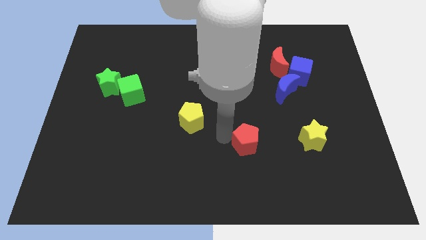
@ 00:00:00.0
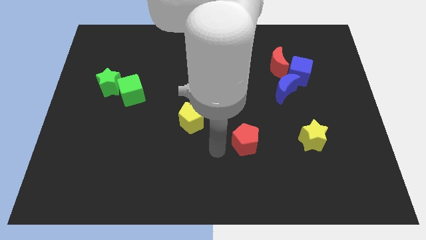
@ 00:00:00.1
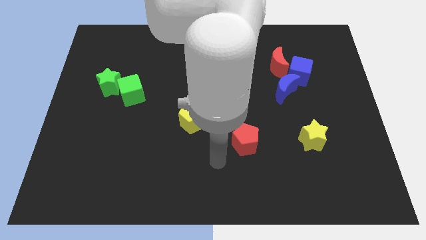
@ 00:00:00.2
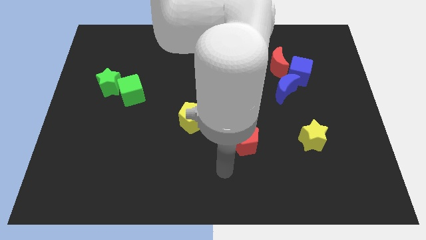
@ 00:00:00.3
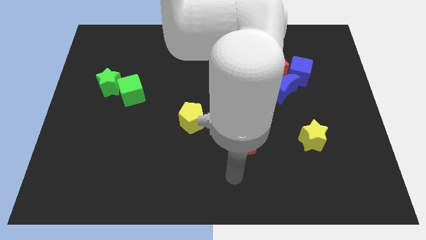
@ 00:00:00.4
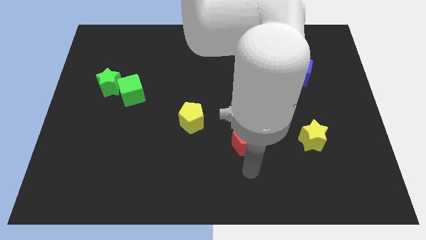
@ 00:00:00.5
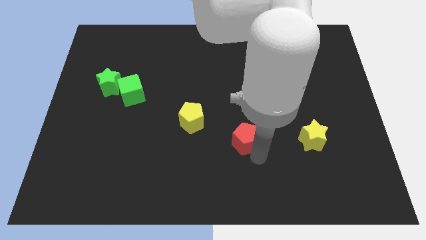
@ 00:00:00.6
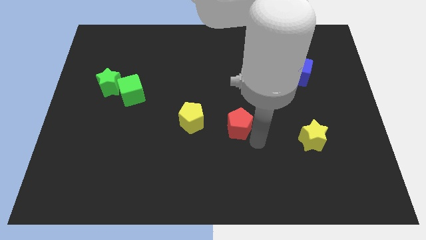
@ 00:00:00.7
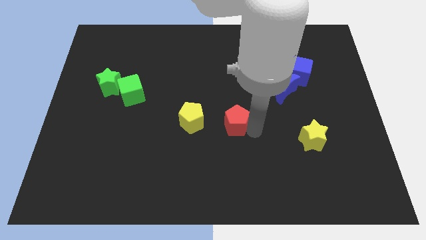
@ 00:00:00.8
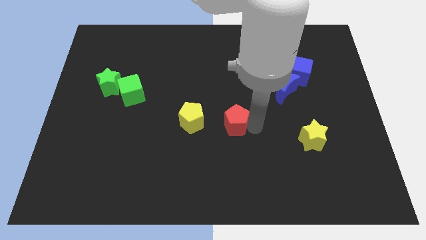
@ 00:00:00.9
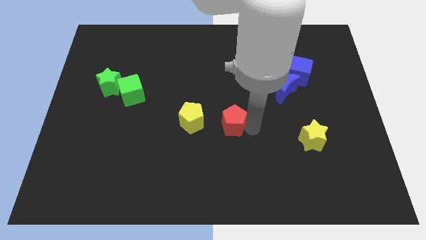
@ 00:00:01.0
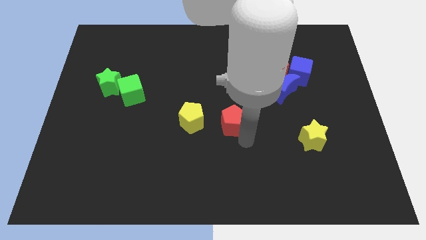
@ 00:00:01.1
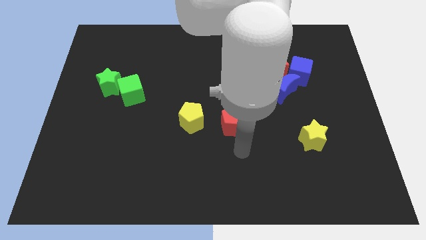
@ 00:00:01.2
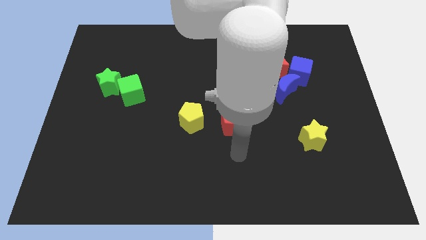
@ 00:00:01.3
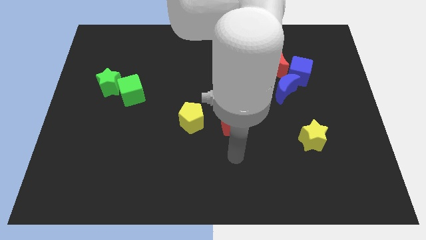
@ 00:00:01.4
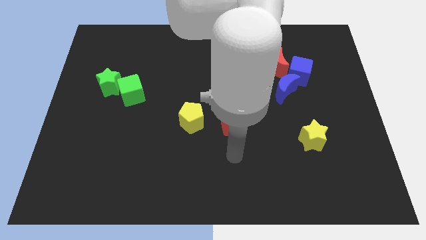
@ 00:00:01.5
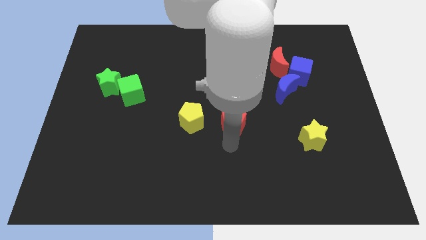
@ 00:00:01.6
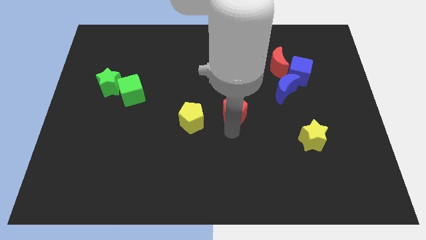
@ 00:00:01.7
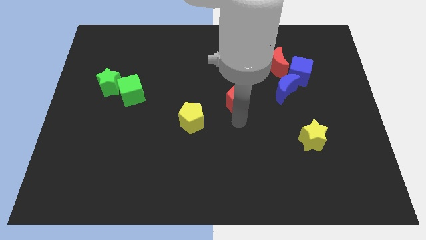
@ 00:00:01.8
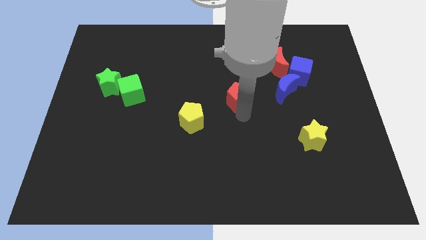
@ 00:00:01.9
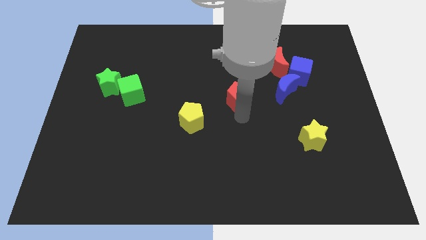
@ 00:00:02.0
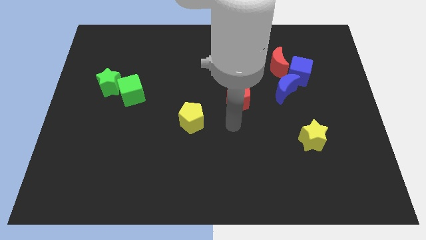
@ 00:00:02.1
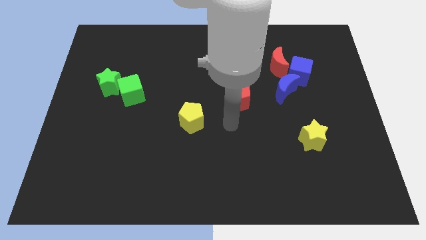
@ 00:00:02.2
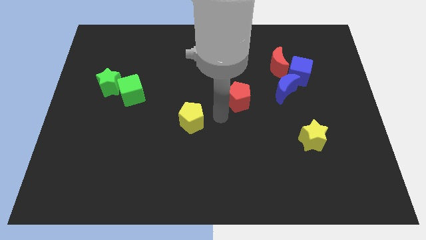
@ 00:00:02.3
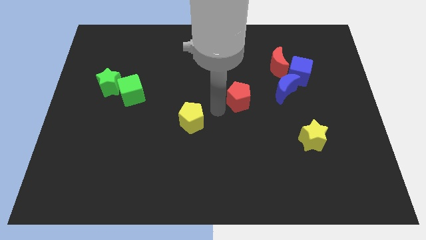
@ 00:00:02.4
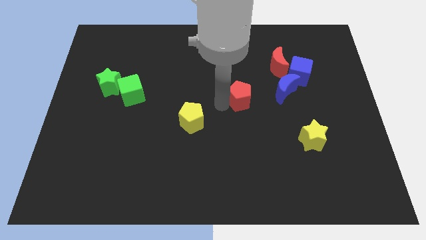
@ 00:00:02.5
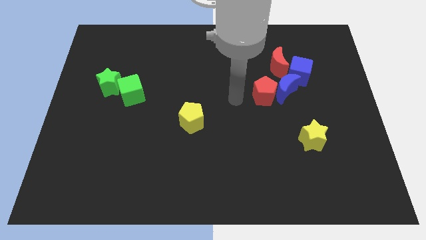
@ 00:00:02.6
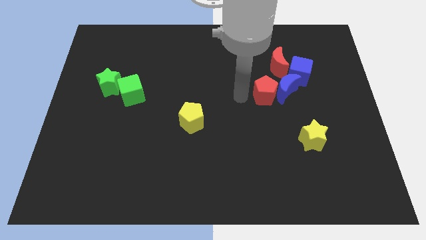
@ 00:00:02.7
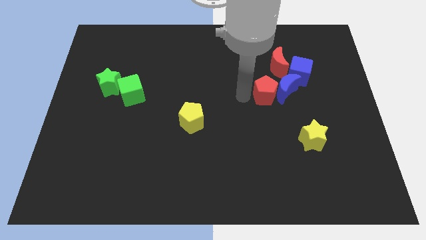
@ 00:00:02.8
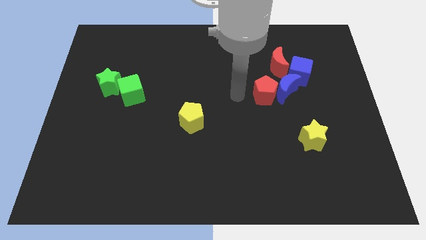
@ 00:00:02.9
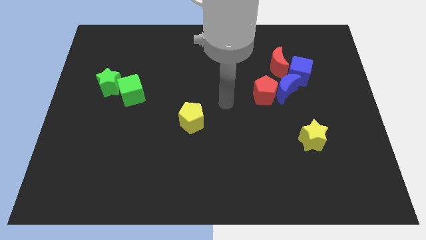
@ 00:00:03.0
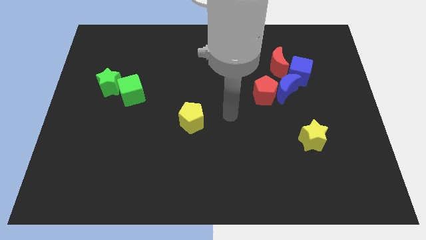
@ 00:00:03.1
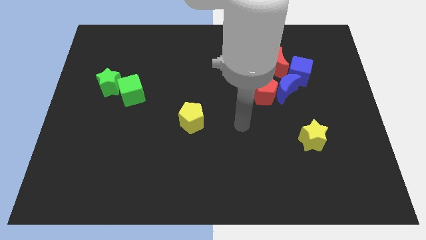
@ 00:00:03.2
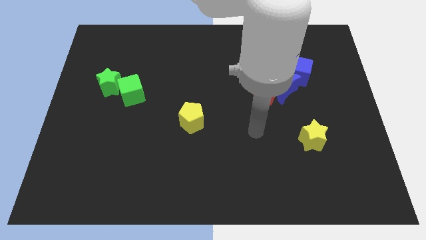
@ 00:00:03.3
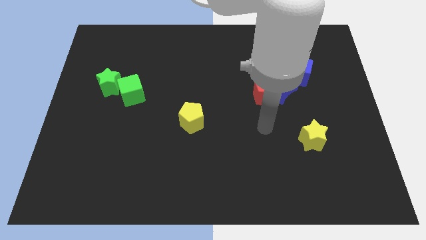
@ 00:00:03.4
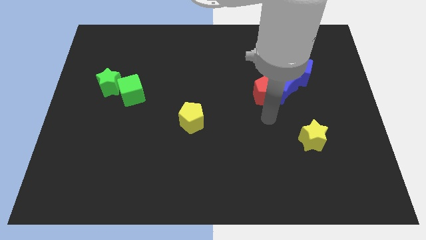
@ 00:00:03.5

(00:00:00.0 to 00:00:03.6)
move red pentagon into the blue moon

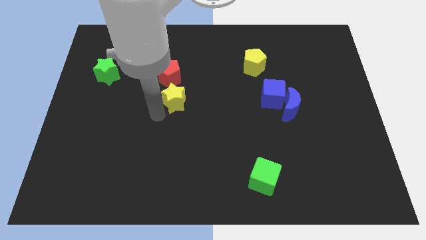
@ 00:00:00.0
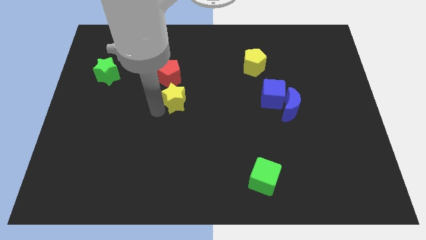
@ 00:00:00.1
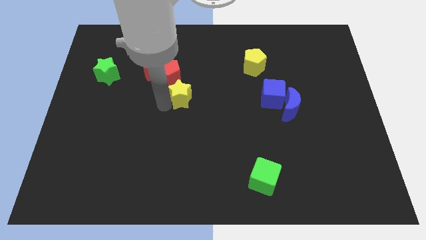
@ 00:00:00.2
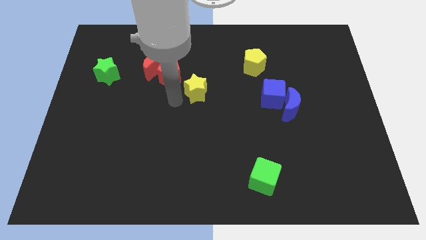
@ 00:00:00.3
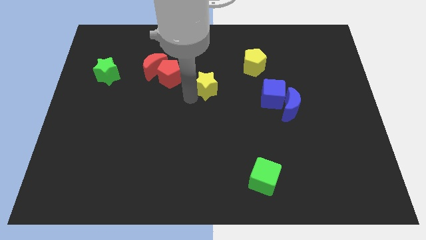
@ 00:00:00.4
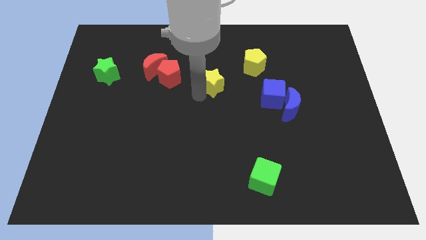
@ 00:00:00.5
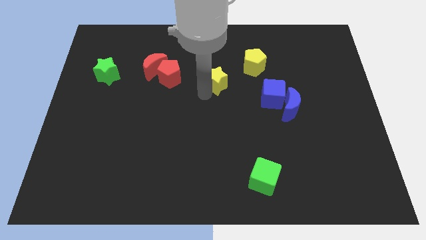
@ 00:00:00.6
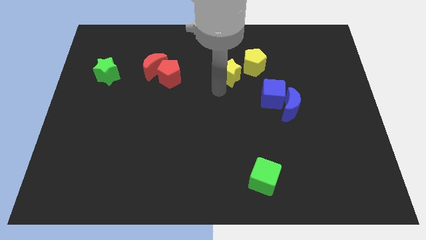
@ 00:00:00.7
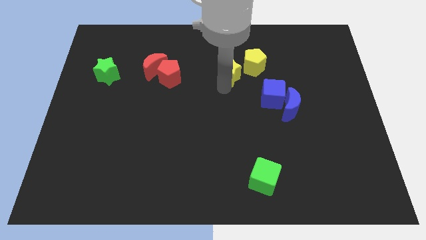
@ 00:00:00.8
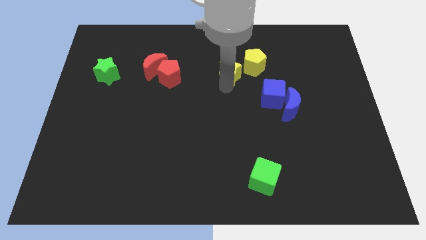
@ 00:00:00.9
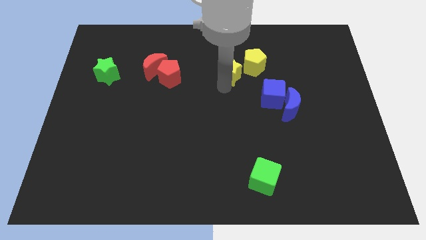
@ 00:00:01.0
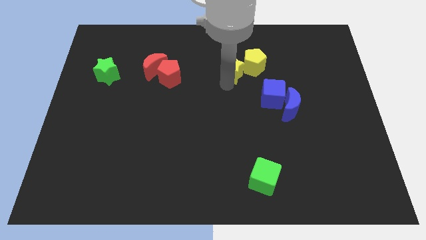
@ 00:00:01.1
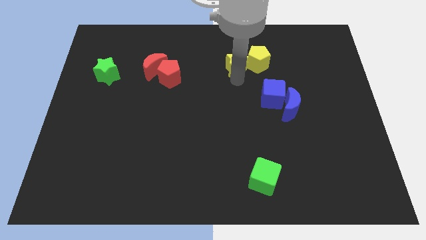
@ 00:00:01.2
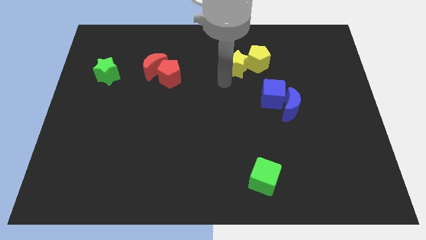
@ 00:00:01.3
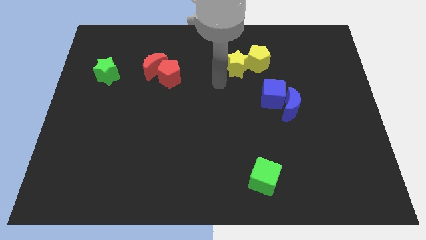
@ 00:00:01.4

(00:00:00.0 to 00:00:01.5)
place the yellow star to the left side of yellow pentagon

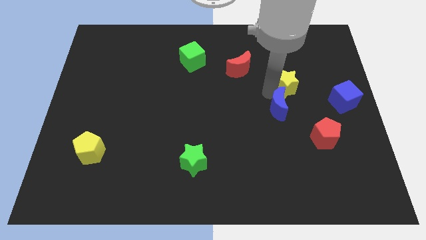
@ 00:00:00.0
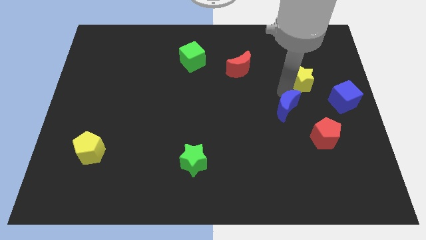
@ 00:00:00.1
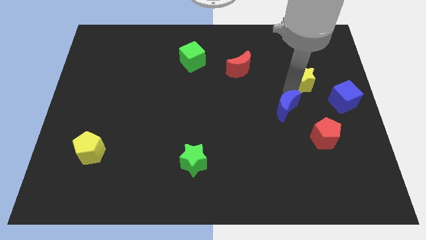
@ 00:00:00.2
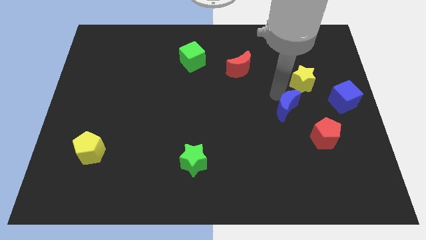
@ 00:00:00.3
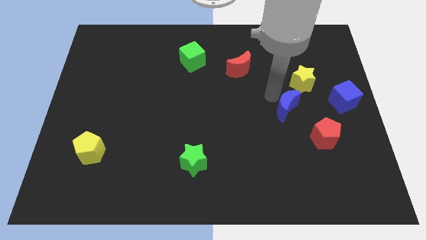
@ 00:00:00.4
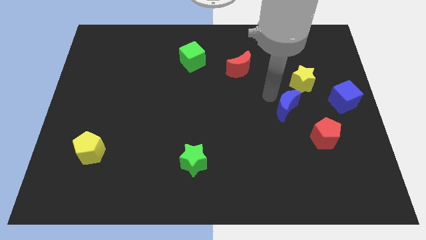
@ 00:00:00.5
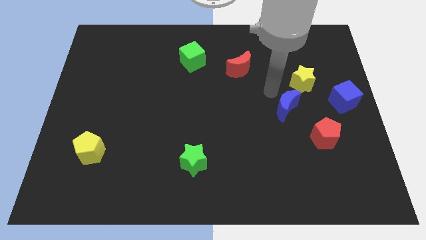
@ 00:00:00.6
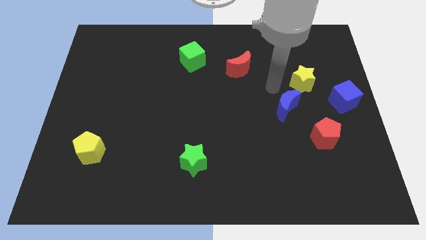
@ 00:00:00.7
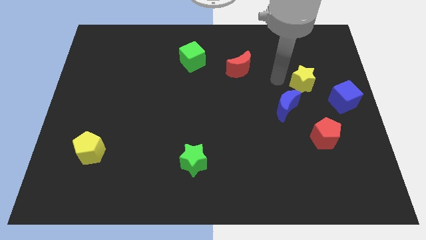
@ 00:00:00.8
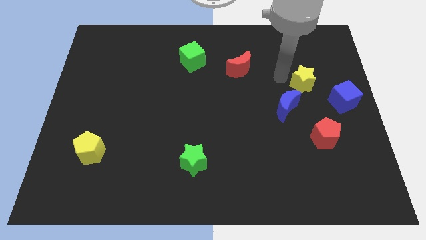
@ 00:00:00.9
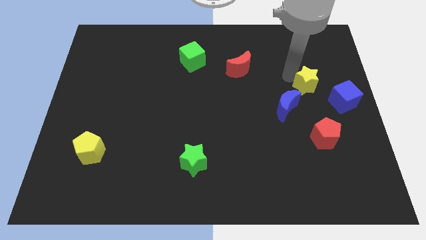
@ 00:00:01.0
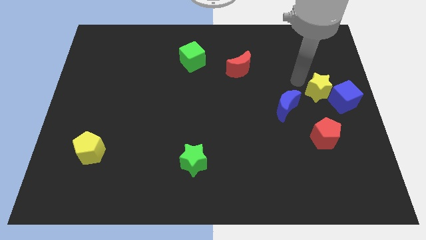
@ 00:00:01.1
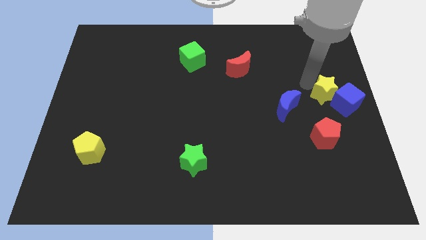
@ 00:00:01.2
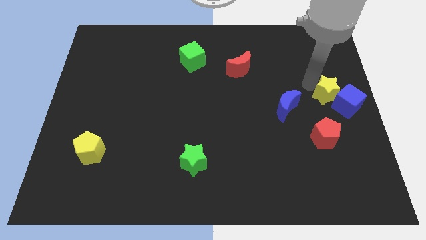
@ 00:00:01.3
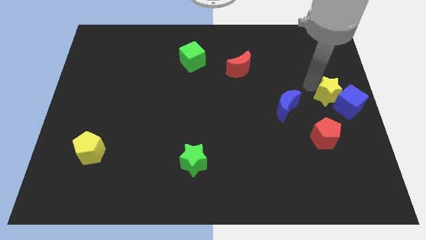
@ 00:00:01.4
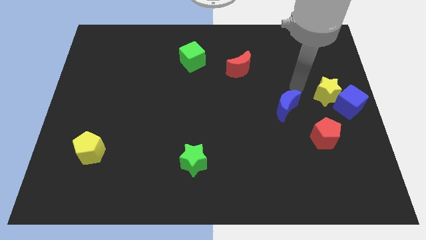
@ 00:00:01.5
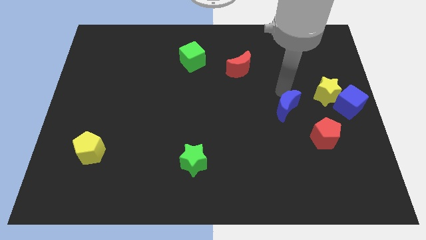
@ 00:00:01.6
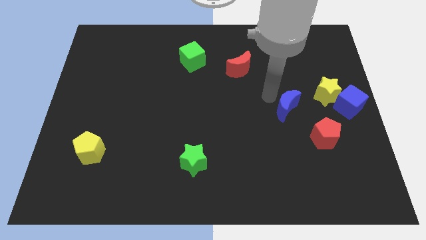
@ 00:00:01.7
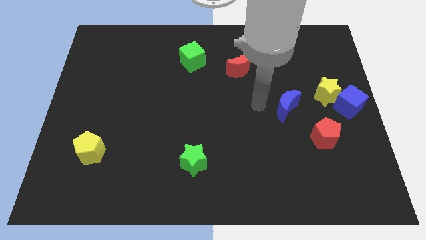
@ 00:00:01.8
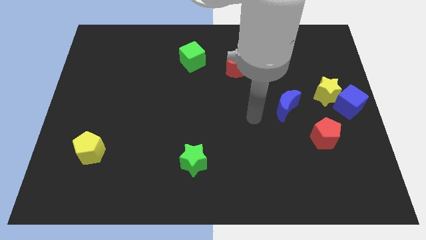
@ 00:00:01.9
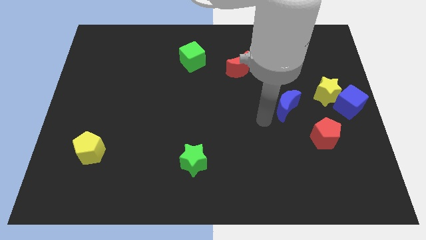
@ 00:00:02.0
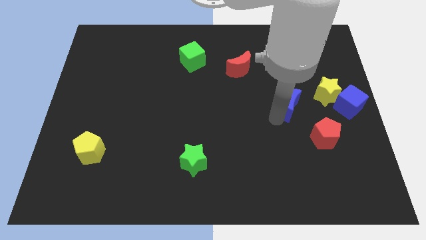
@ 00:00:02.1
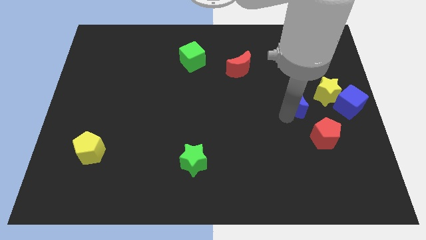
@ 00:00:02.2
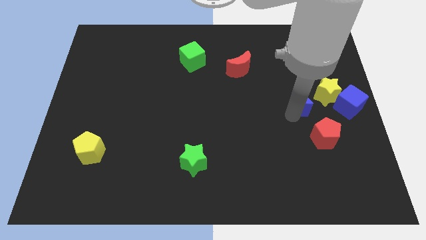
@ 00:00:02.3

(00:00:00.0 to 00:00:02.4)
place the yellow star into the blue cube

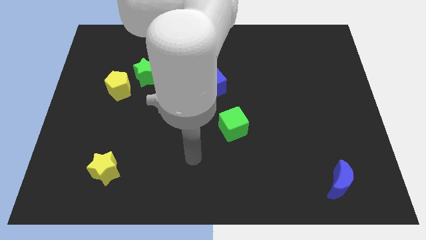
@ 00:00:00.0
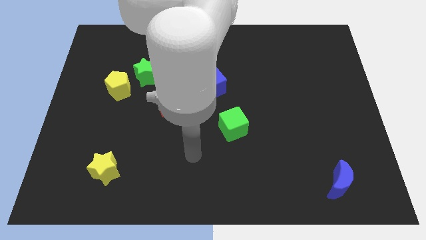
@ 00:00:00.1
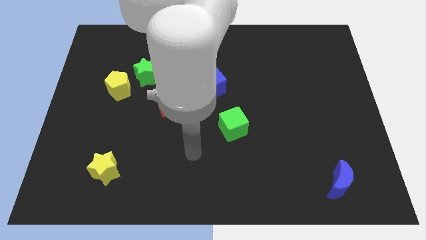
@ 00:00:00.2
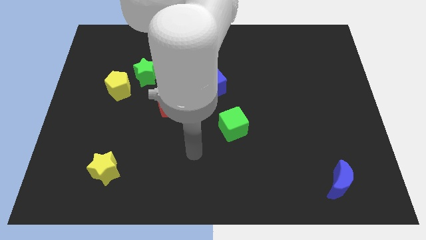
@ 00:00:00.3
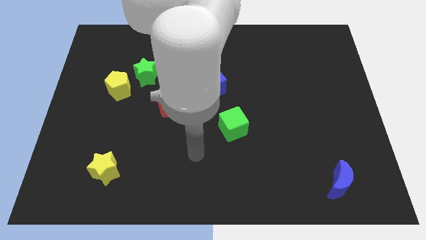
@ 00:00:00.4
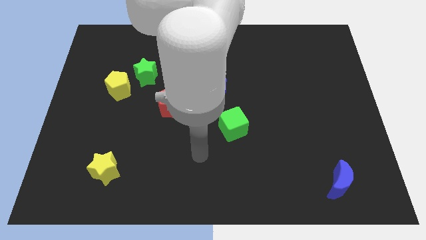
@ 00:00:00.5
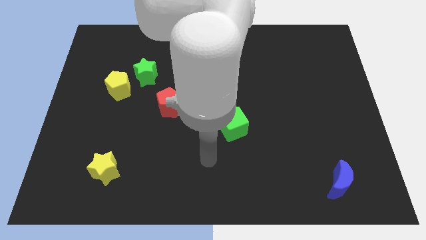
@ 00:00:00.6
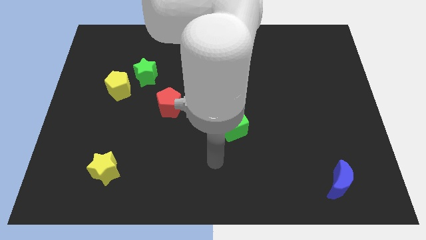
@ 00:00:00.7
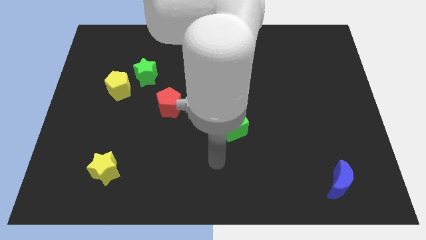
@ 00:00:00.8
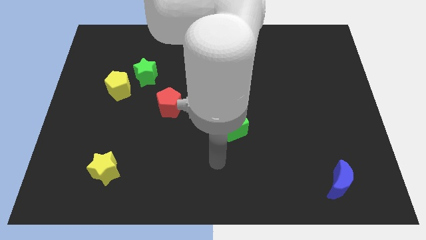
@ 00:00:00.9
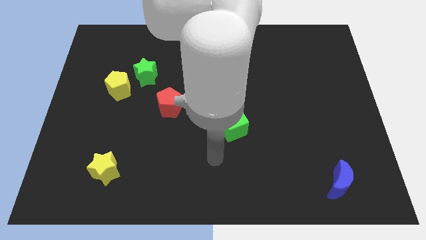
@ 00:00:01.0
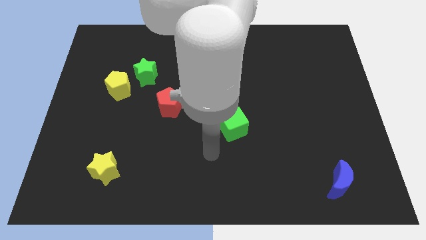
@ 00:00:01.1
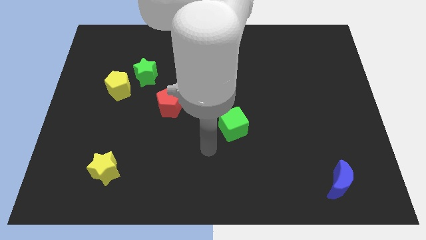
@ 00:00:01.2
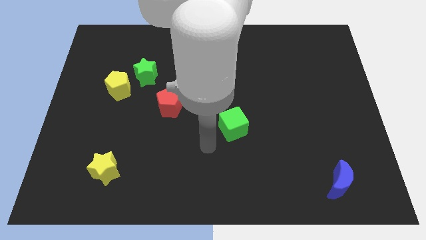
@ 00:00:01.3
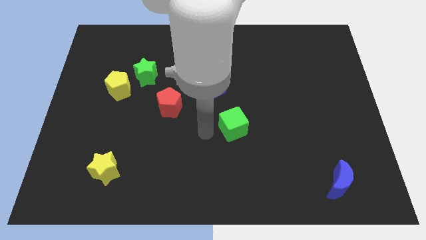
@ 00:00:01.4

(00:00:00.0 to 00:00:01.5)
point your arm at the left of the green cube
